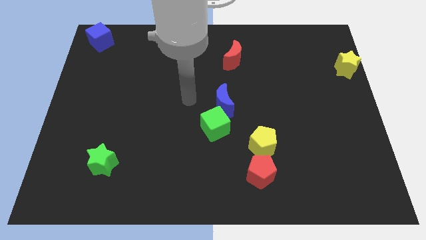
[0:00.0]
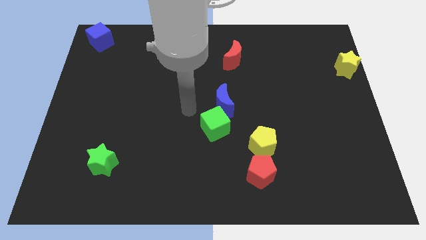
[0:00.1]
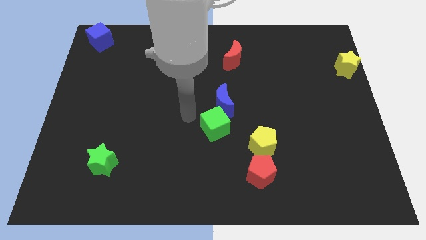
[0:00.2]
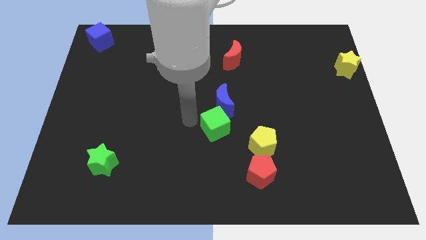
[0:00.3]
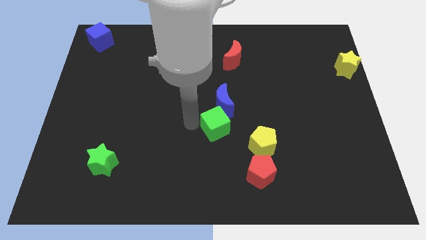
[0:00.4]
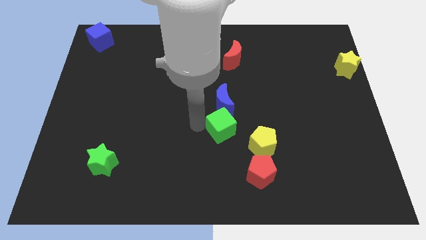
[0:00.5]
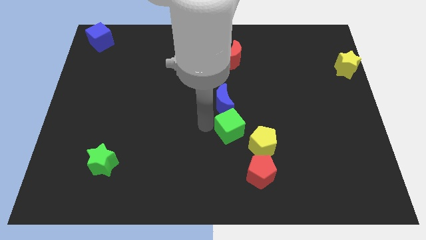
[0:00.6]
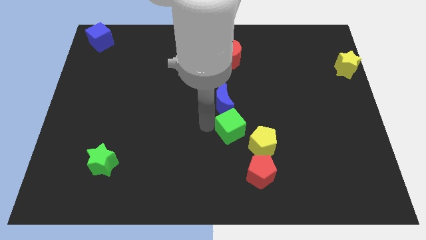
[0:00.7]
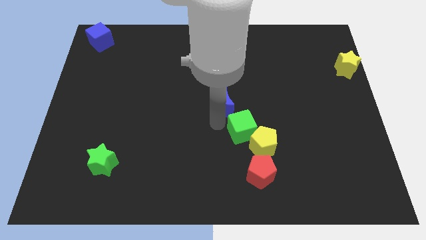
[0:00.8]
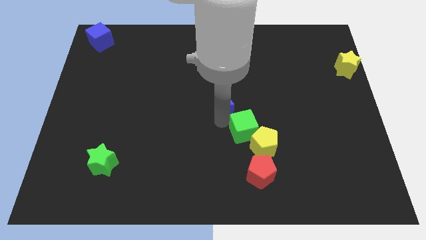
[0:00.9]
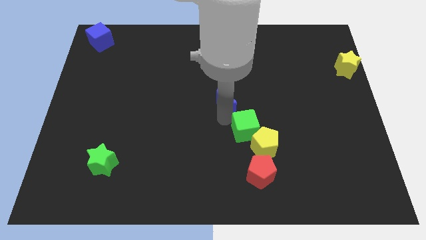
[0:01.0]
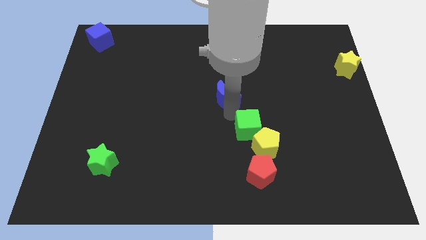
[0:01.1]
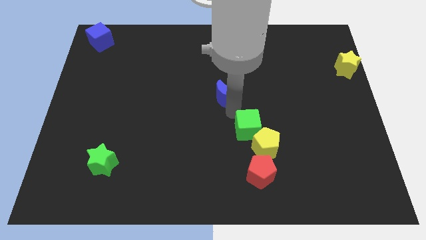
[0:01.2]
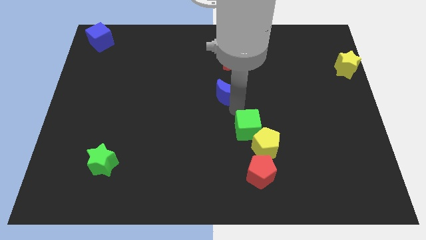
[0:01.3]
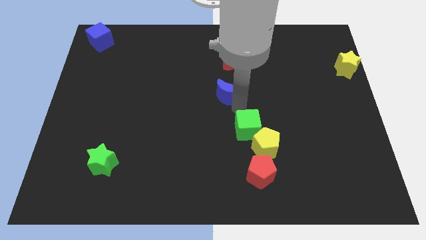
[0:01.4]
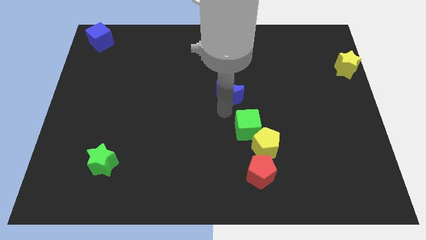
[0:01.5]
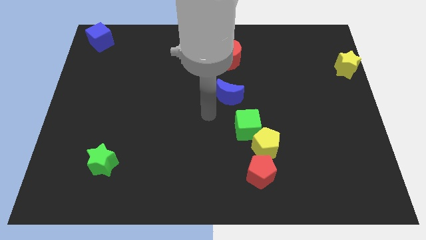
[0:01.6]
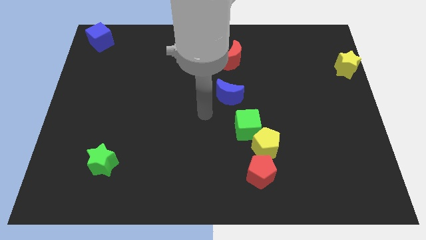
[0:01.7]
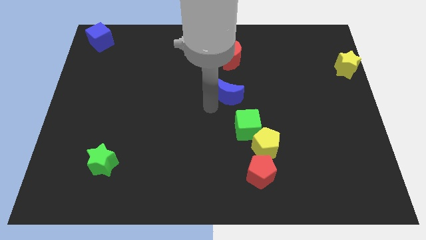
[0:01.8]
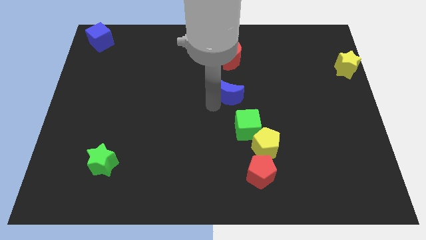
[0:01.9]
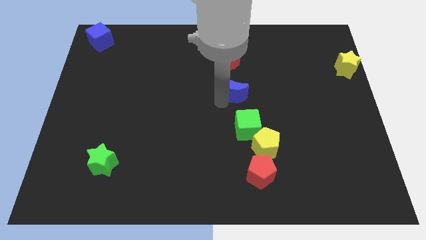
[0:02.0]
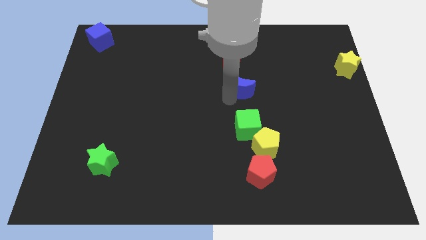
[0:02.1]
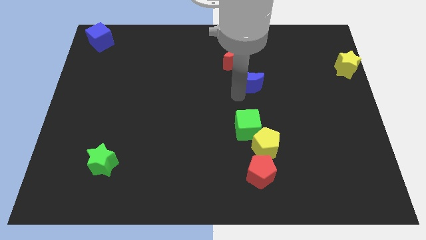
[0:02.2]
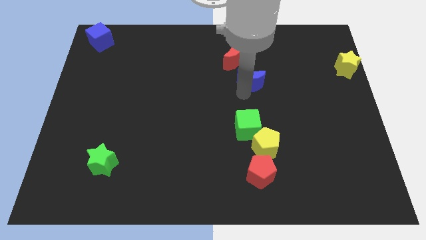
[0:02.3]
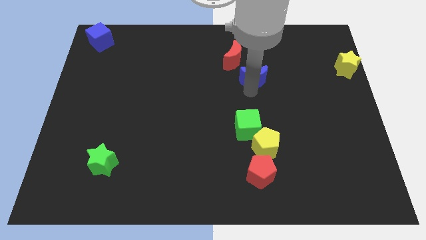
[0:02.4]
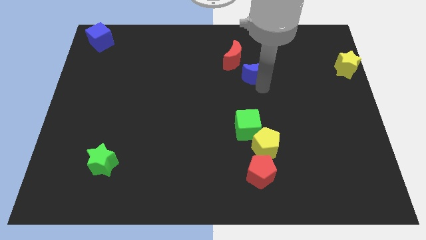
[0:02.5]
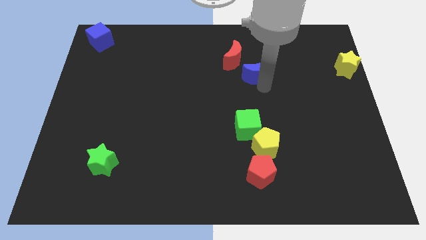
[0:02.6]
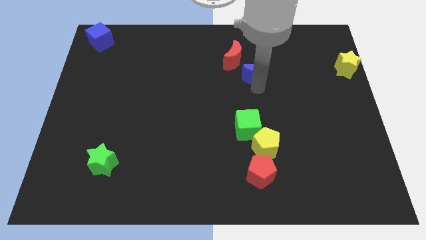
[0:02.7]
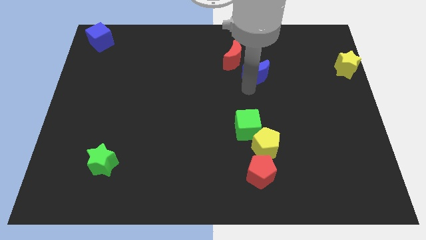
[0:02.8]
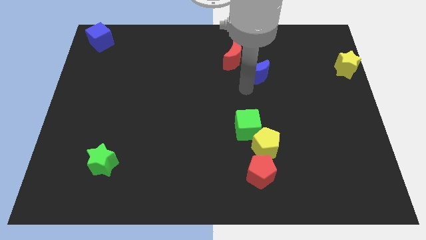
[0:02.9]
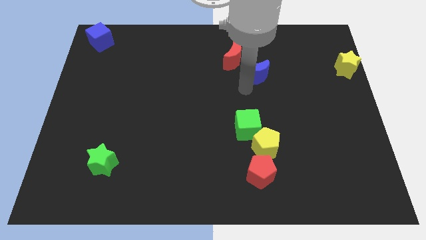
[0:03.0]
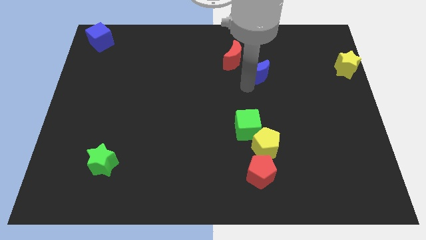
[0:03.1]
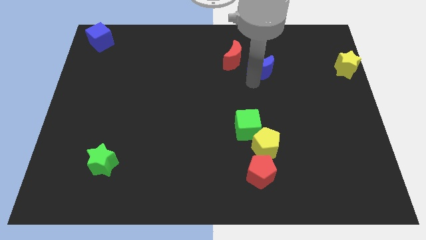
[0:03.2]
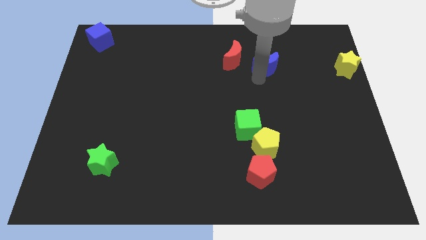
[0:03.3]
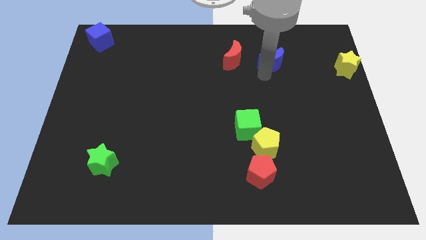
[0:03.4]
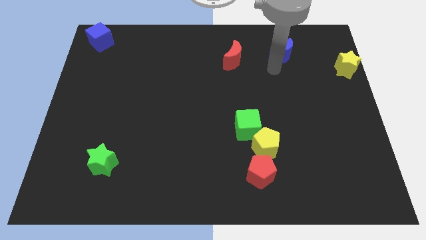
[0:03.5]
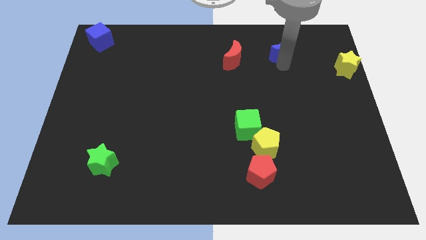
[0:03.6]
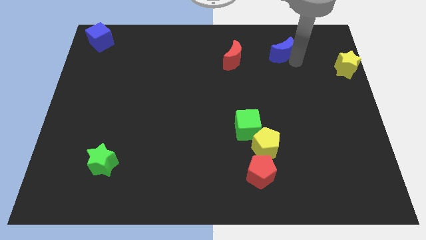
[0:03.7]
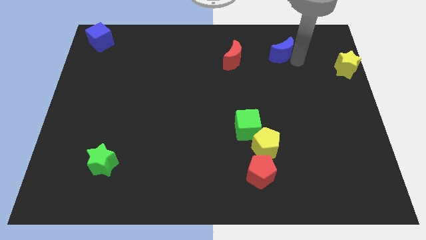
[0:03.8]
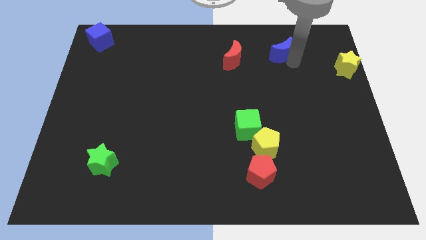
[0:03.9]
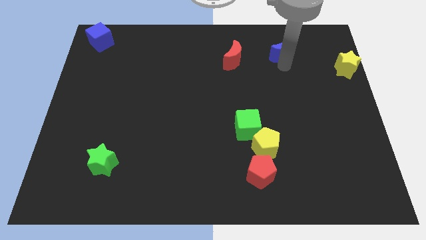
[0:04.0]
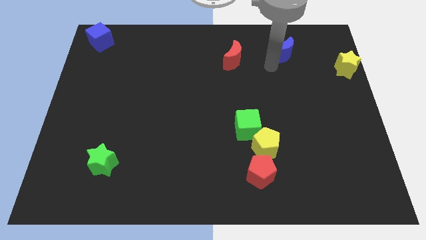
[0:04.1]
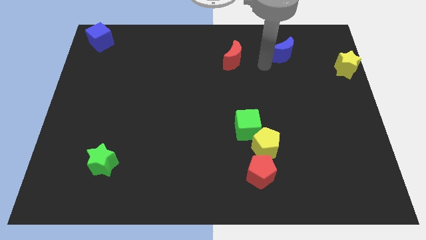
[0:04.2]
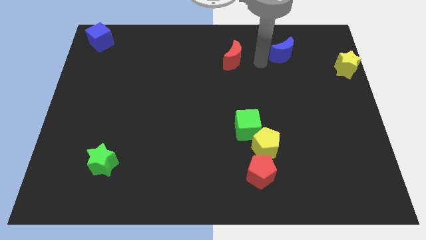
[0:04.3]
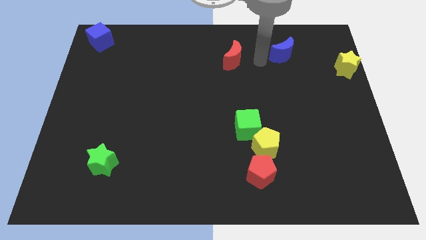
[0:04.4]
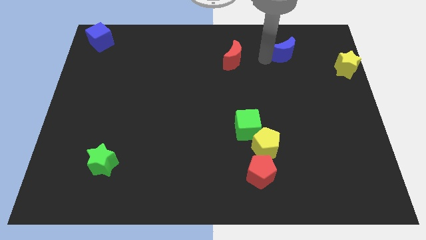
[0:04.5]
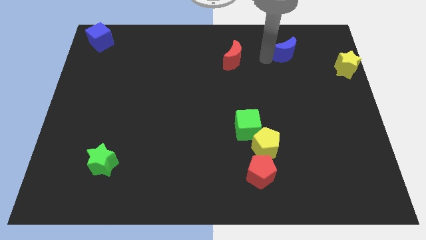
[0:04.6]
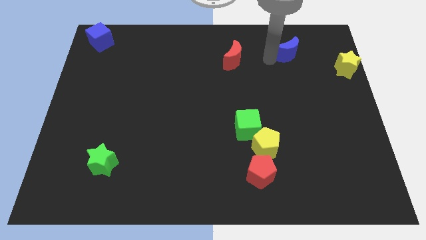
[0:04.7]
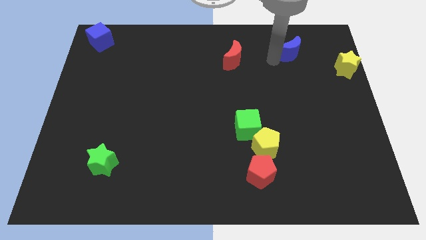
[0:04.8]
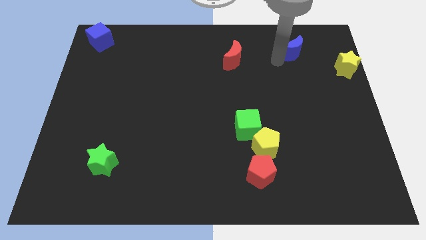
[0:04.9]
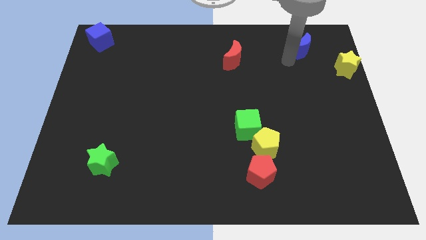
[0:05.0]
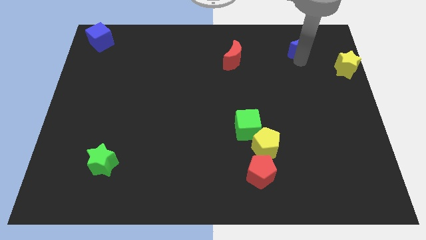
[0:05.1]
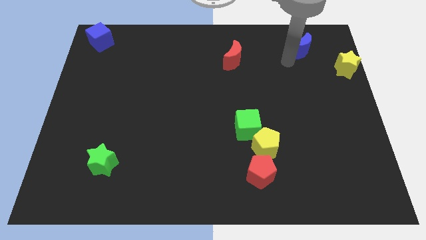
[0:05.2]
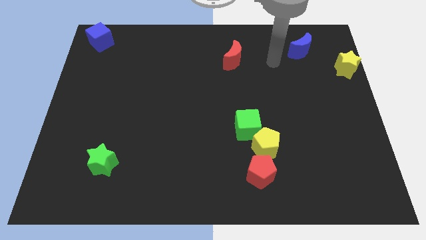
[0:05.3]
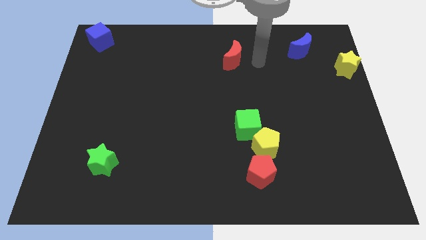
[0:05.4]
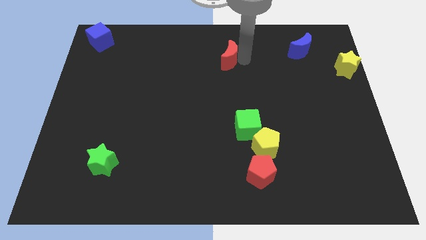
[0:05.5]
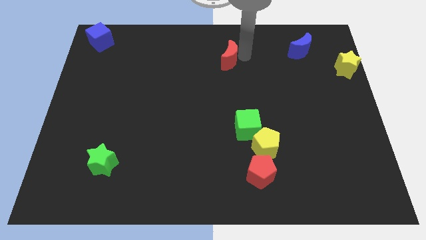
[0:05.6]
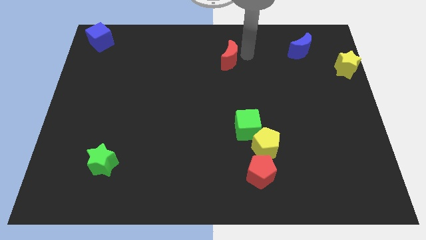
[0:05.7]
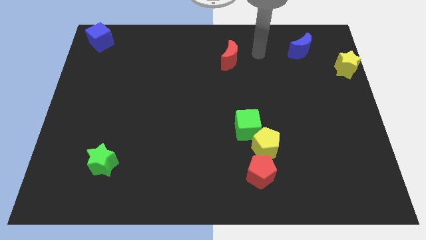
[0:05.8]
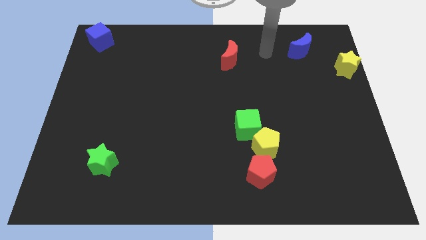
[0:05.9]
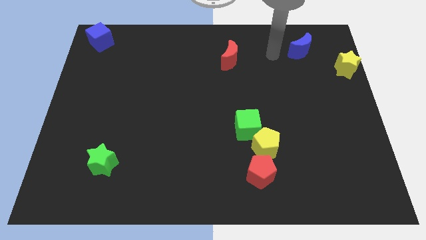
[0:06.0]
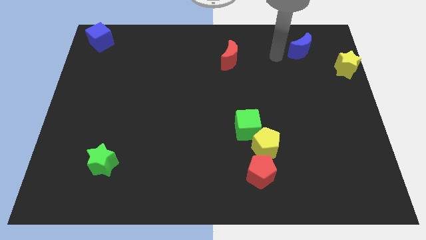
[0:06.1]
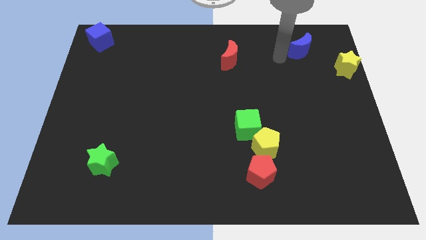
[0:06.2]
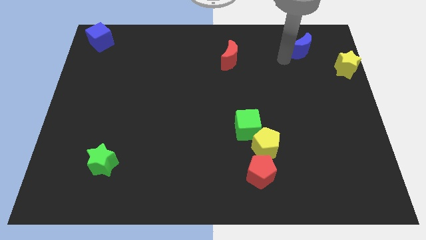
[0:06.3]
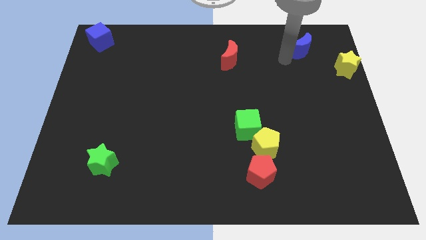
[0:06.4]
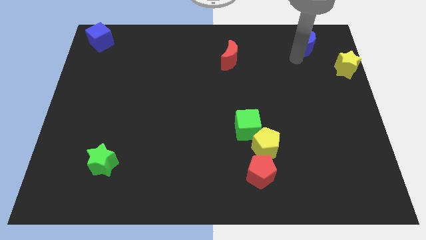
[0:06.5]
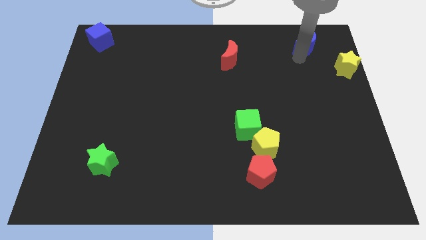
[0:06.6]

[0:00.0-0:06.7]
push blue crescent away from green block

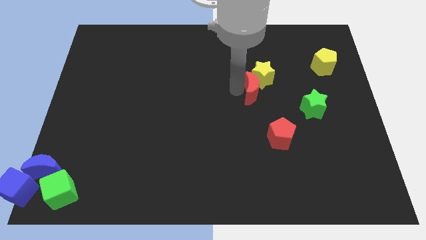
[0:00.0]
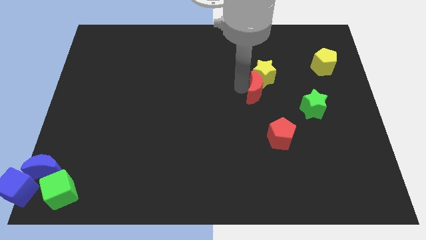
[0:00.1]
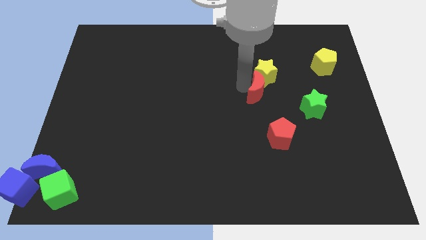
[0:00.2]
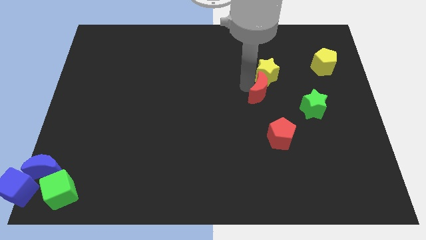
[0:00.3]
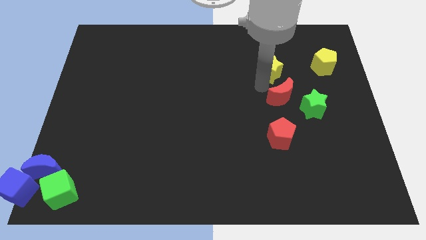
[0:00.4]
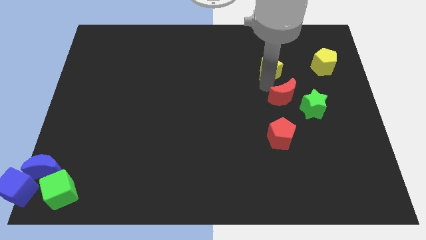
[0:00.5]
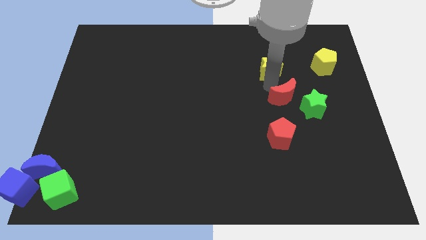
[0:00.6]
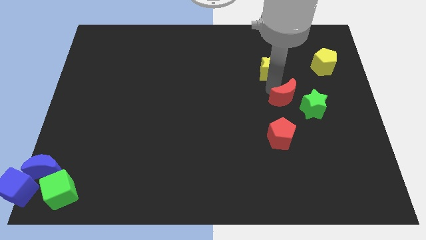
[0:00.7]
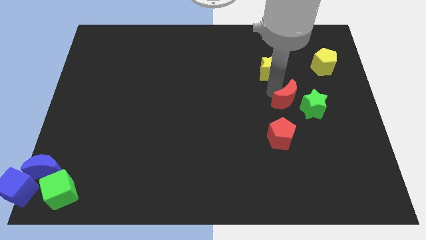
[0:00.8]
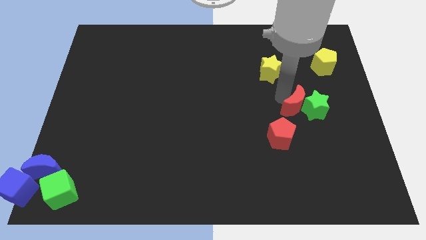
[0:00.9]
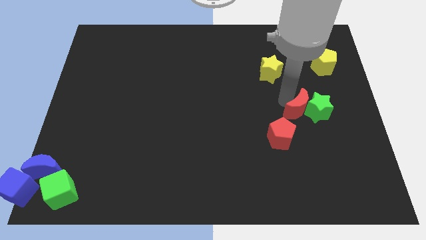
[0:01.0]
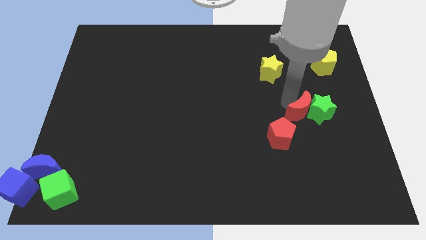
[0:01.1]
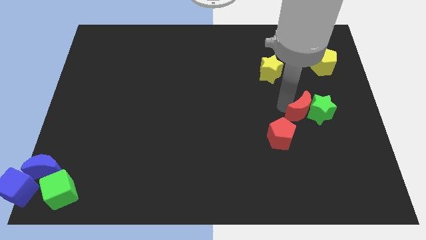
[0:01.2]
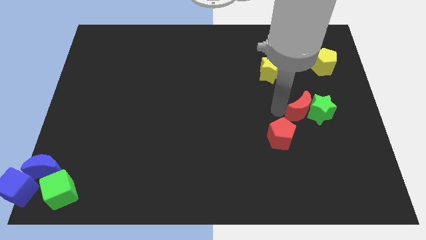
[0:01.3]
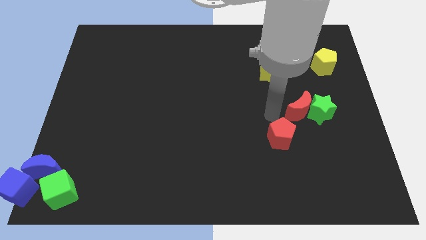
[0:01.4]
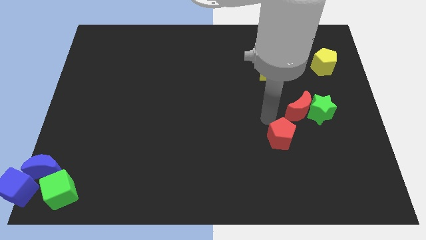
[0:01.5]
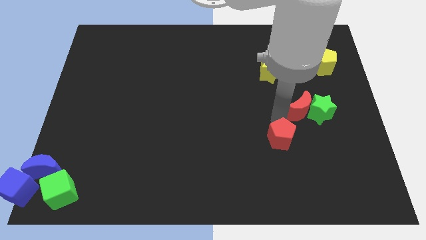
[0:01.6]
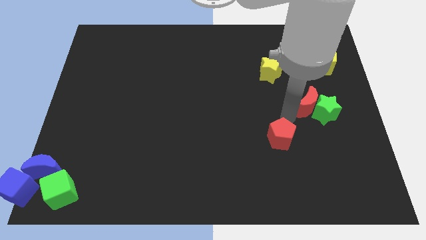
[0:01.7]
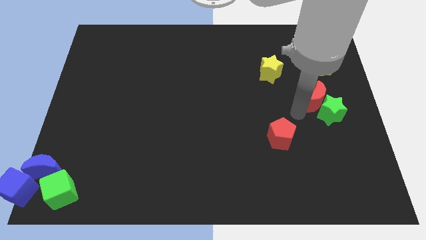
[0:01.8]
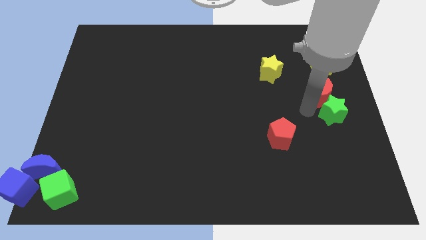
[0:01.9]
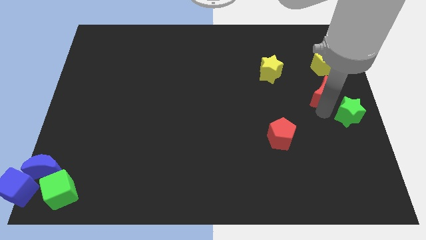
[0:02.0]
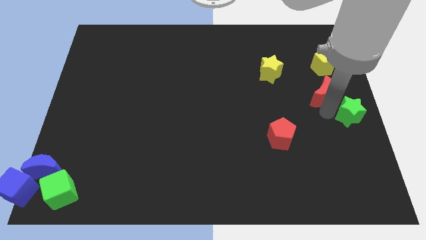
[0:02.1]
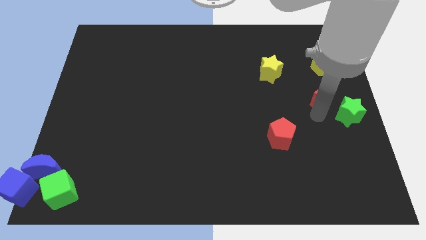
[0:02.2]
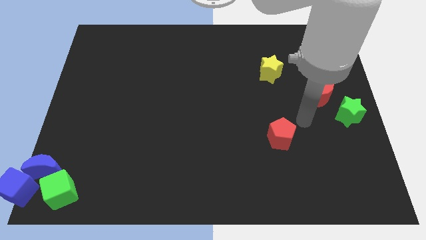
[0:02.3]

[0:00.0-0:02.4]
separate the red moon towards green star and push upwards
